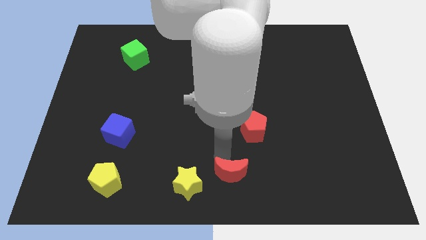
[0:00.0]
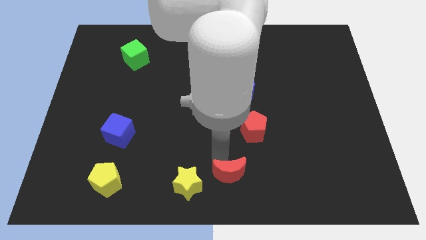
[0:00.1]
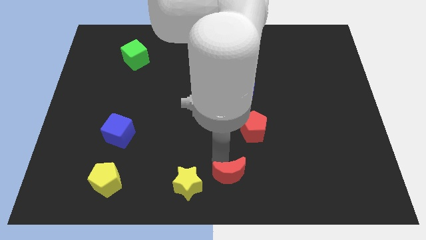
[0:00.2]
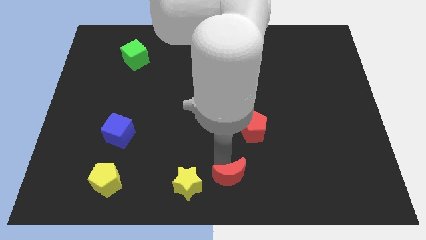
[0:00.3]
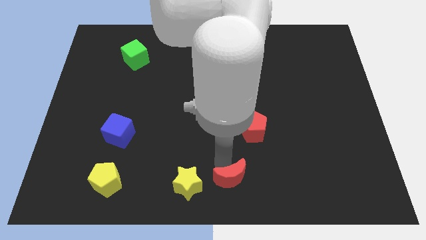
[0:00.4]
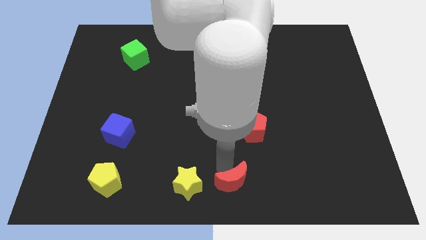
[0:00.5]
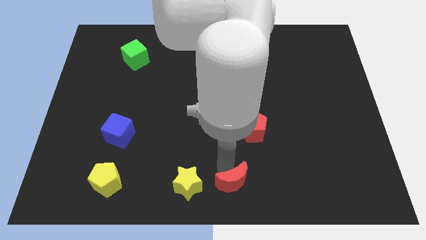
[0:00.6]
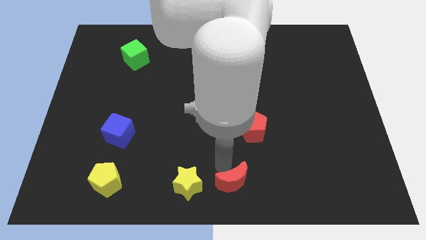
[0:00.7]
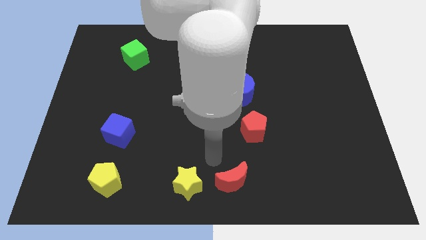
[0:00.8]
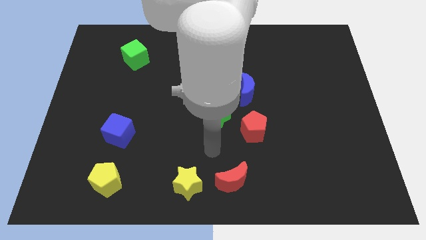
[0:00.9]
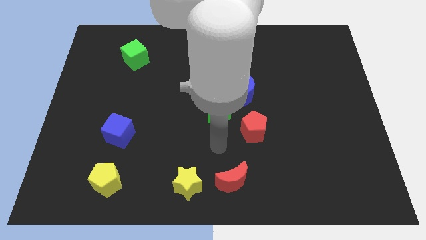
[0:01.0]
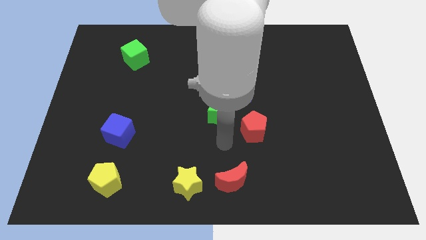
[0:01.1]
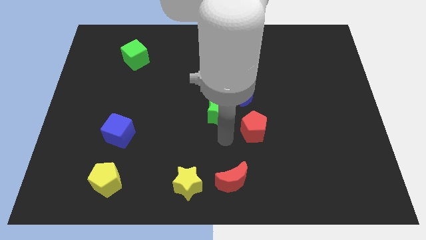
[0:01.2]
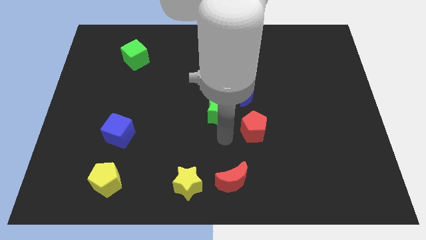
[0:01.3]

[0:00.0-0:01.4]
push the red moon diagonally top right to yellow star

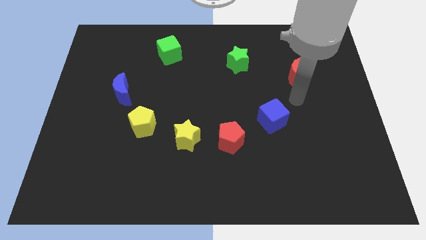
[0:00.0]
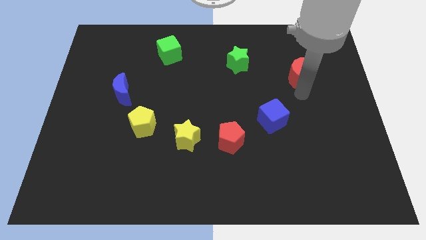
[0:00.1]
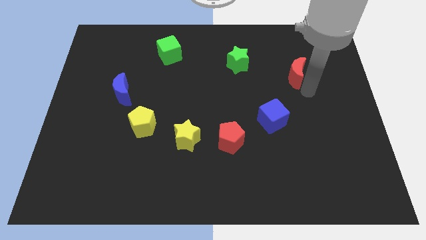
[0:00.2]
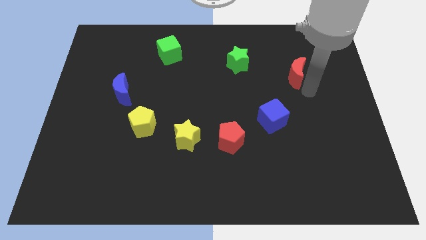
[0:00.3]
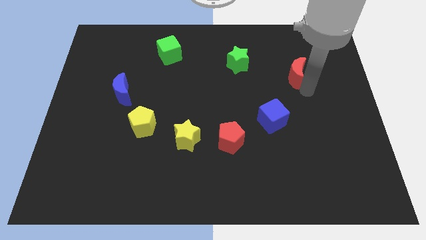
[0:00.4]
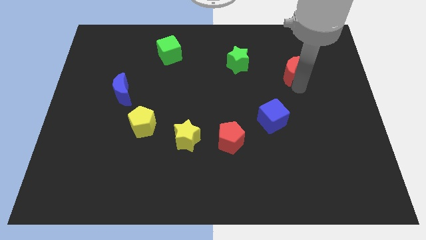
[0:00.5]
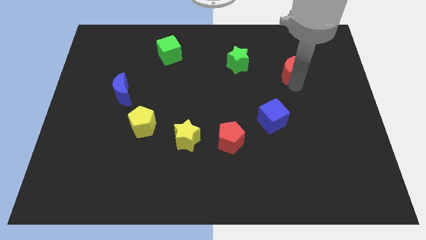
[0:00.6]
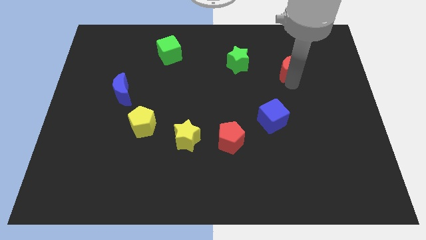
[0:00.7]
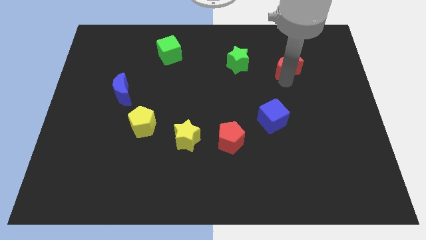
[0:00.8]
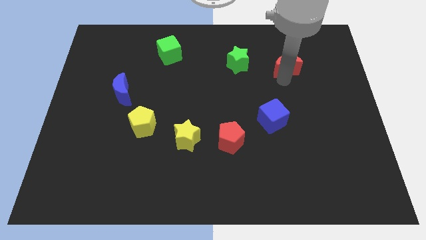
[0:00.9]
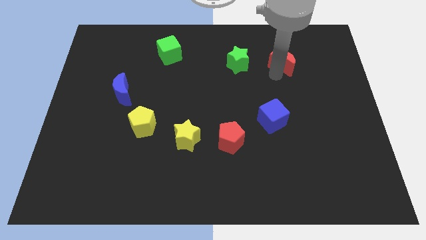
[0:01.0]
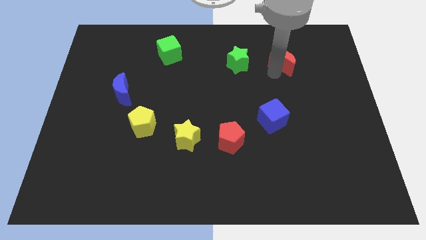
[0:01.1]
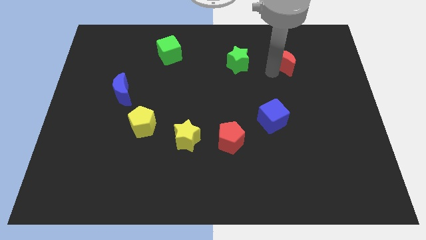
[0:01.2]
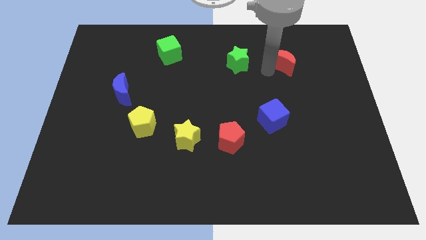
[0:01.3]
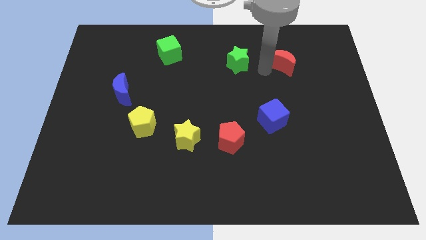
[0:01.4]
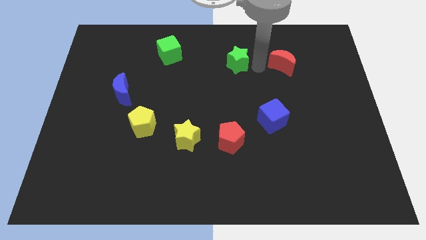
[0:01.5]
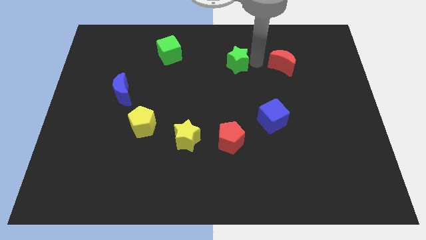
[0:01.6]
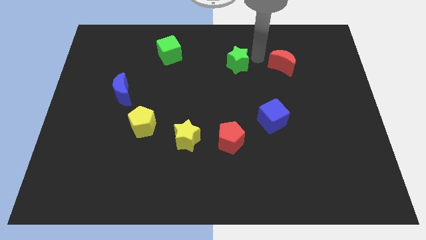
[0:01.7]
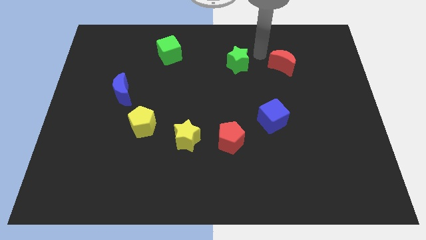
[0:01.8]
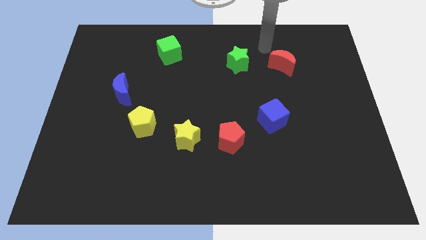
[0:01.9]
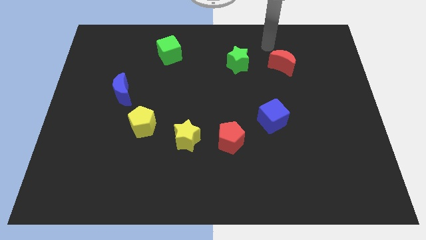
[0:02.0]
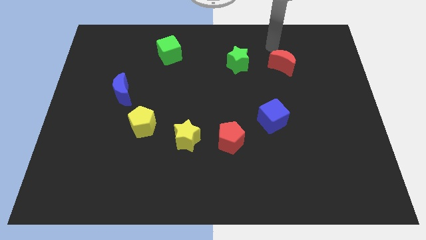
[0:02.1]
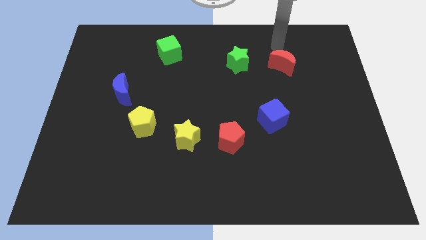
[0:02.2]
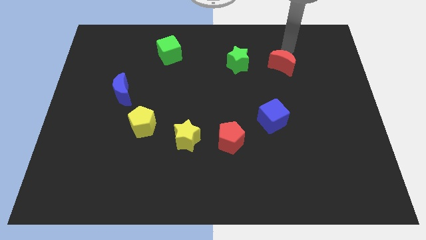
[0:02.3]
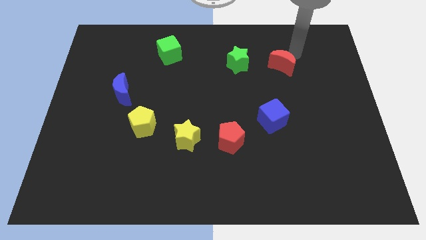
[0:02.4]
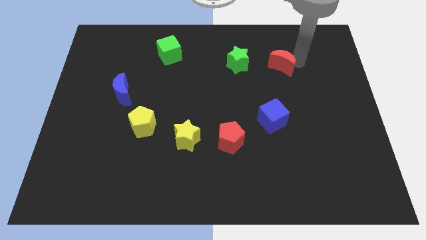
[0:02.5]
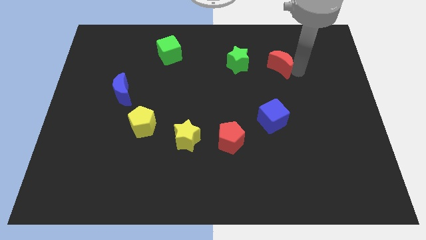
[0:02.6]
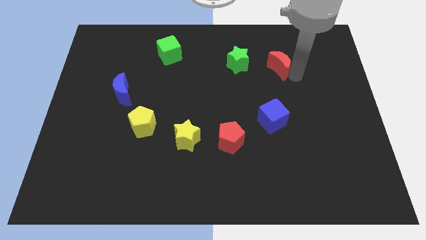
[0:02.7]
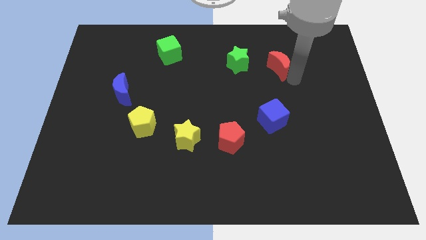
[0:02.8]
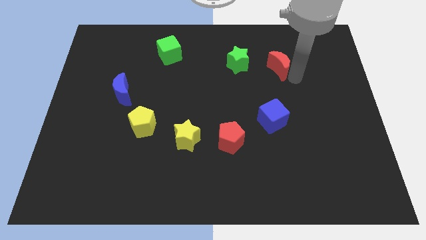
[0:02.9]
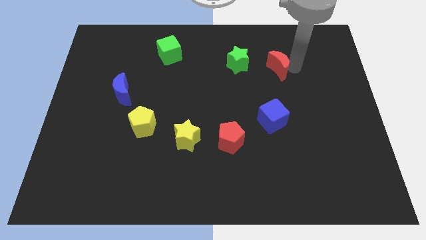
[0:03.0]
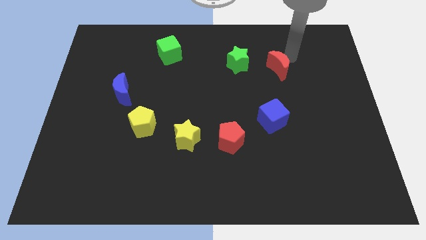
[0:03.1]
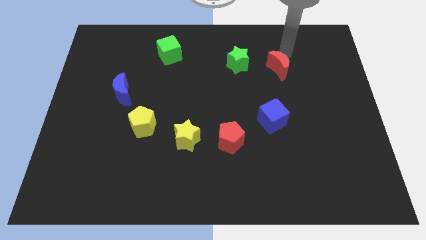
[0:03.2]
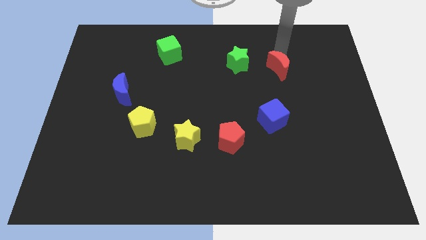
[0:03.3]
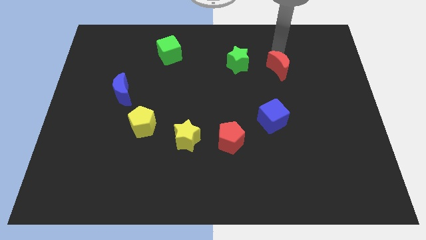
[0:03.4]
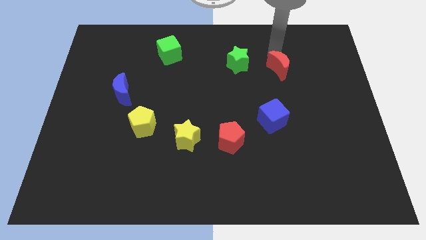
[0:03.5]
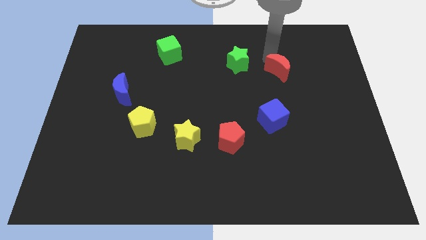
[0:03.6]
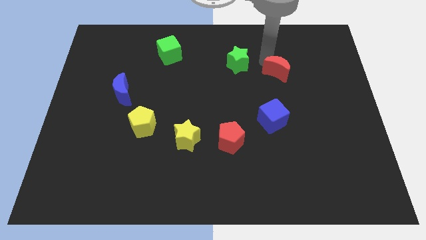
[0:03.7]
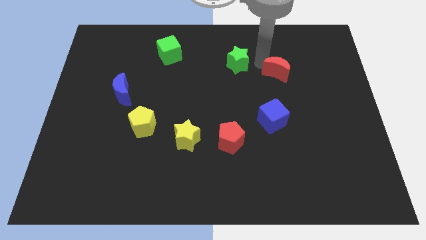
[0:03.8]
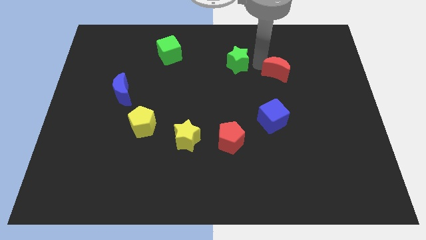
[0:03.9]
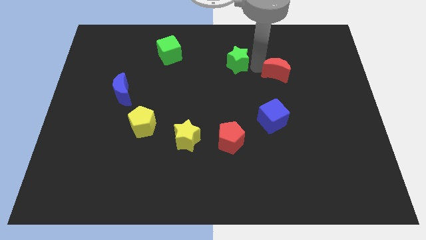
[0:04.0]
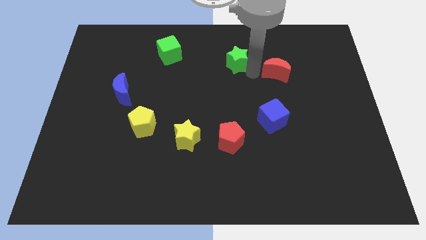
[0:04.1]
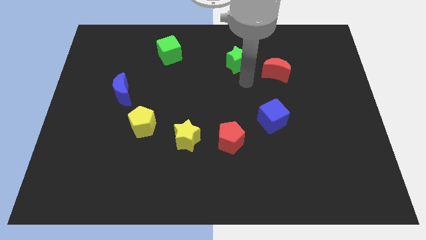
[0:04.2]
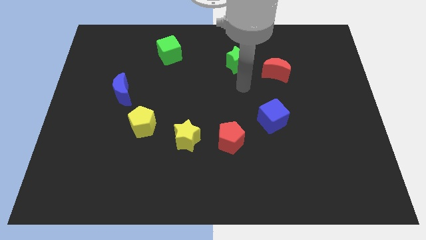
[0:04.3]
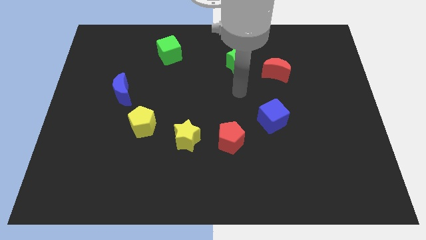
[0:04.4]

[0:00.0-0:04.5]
put the red crescent vertically on the top side of the blue cube

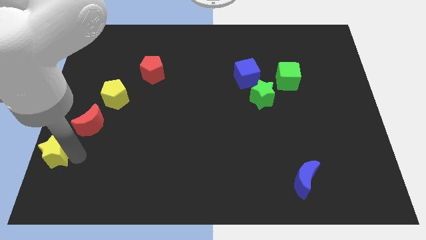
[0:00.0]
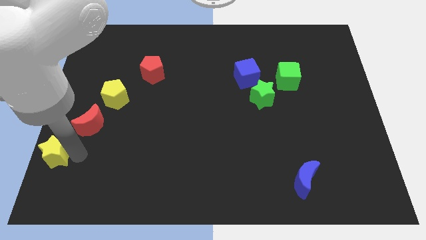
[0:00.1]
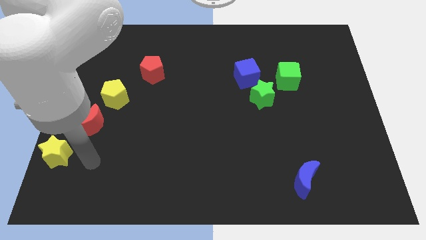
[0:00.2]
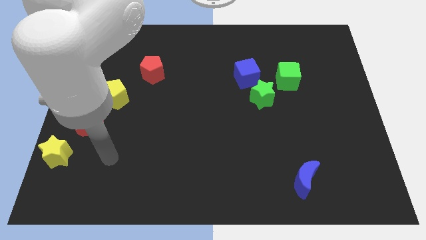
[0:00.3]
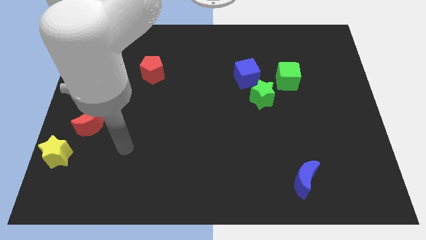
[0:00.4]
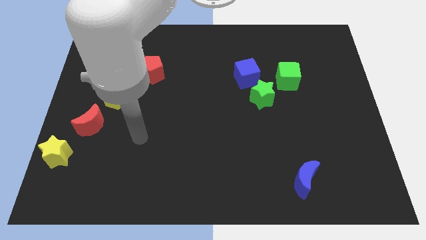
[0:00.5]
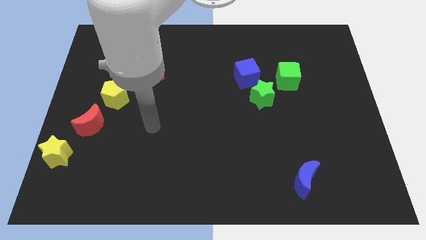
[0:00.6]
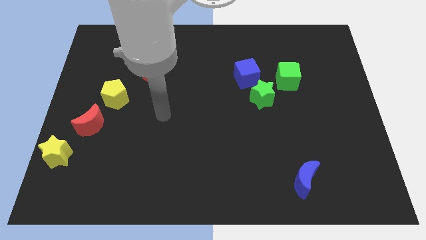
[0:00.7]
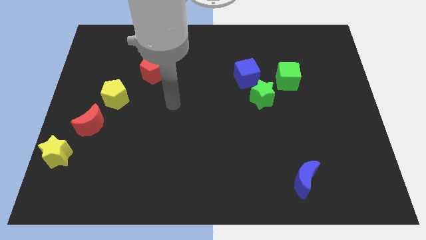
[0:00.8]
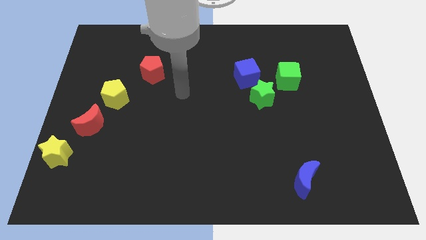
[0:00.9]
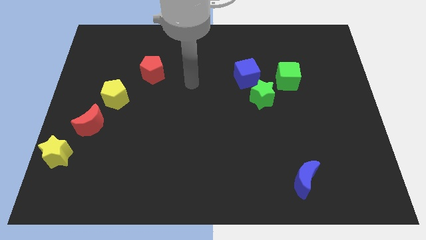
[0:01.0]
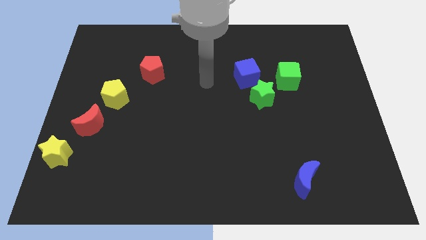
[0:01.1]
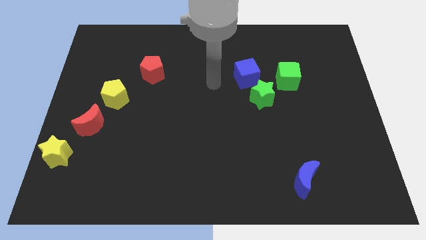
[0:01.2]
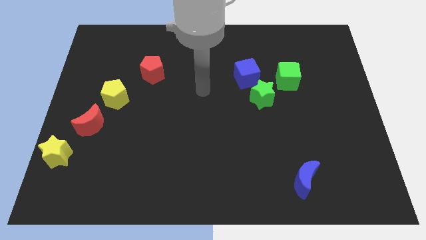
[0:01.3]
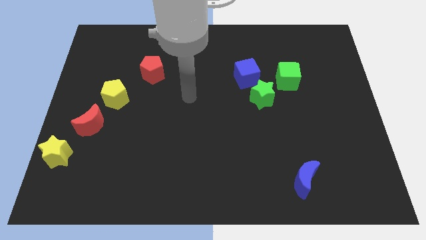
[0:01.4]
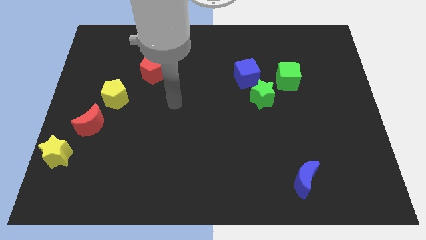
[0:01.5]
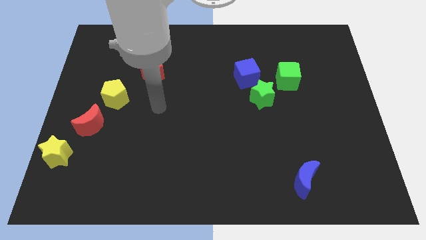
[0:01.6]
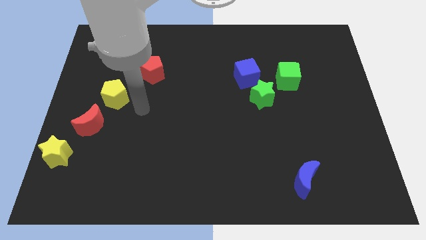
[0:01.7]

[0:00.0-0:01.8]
point your arm at the right side of the yellow pentagon

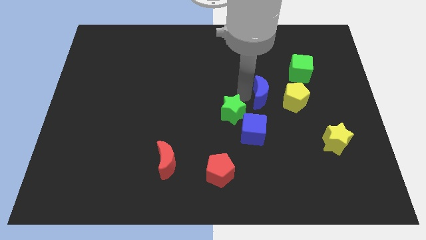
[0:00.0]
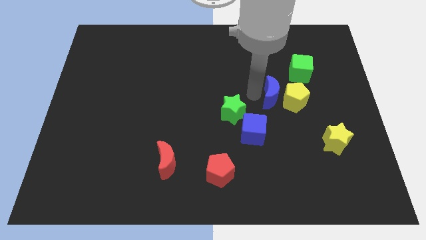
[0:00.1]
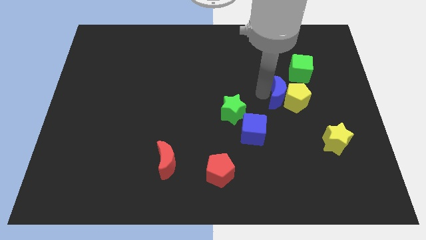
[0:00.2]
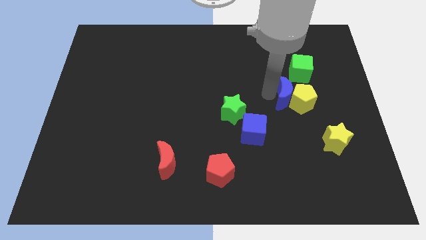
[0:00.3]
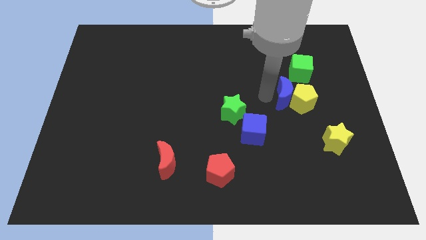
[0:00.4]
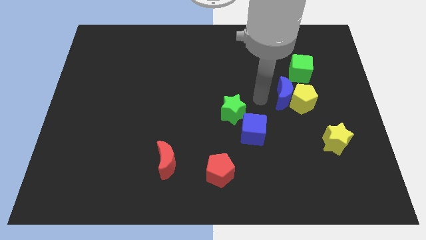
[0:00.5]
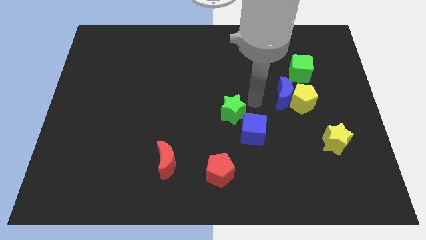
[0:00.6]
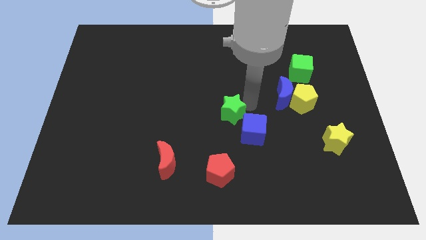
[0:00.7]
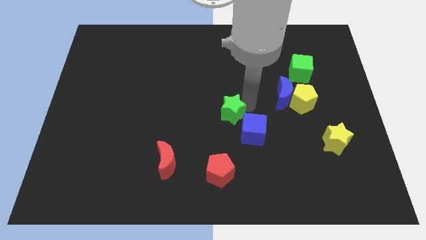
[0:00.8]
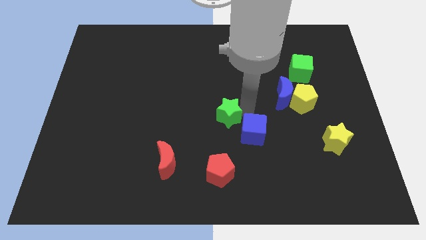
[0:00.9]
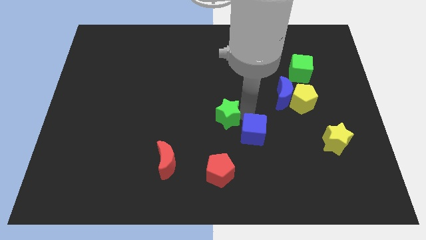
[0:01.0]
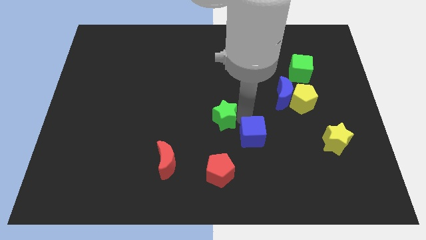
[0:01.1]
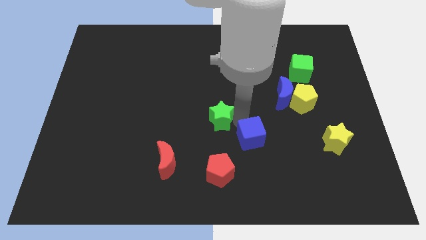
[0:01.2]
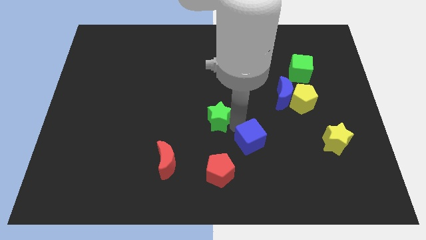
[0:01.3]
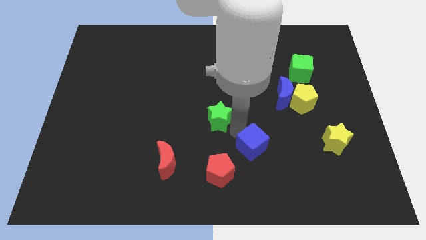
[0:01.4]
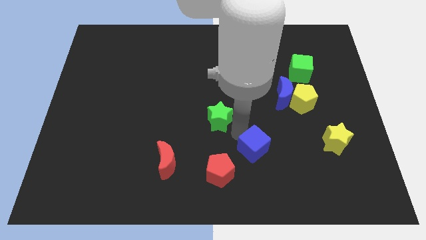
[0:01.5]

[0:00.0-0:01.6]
move the green star slightly to the center of the board
